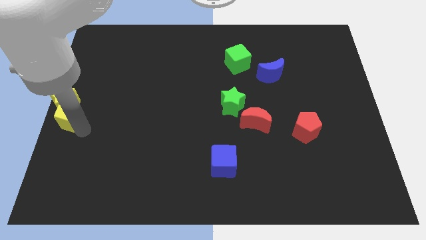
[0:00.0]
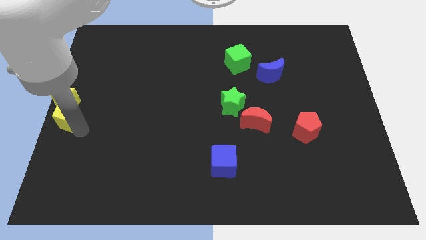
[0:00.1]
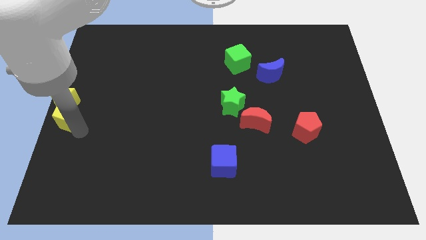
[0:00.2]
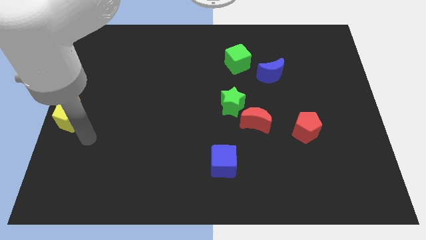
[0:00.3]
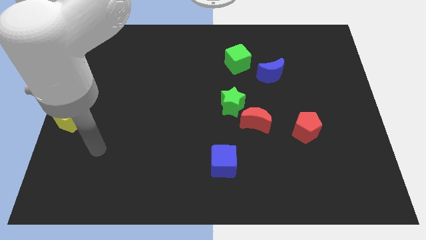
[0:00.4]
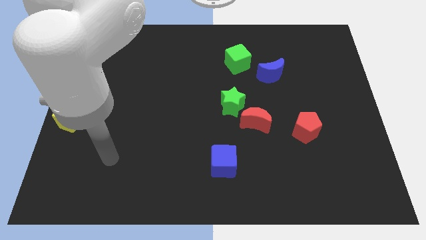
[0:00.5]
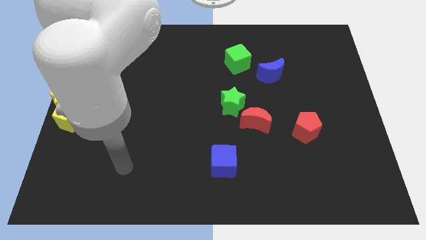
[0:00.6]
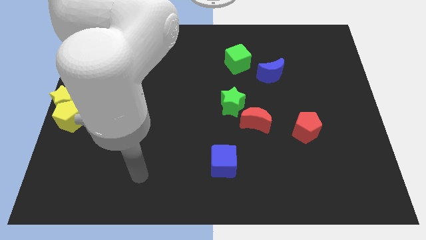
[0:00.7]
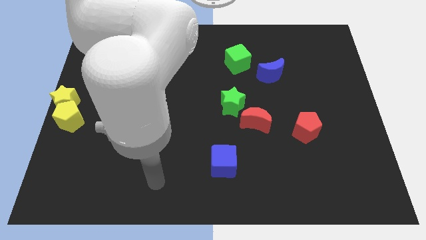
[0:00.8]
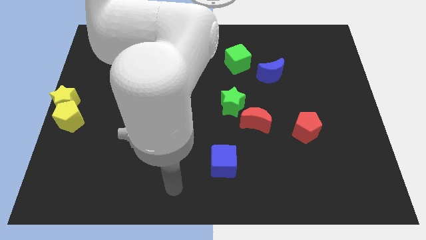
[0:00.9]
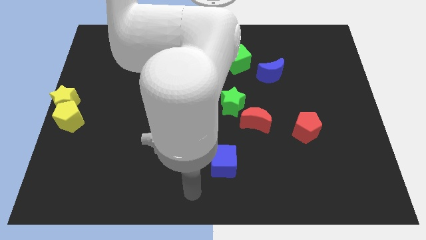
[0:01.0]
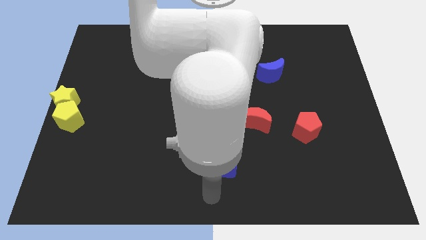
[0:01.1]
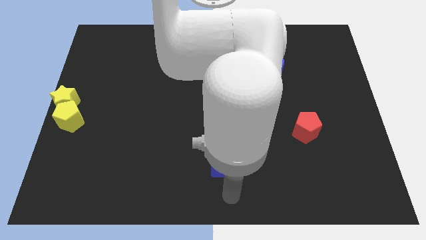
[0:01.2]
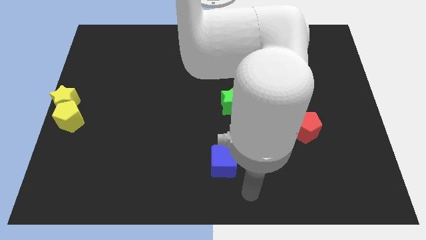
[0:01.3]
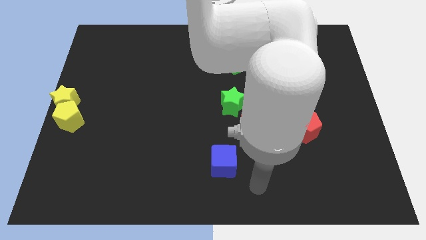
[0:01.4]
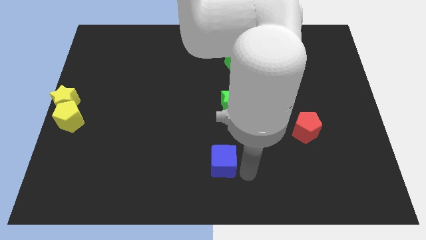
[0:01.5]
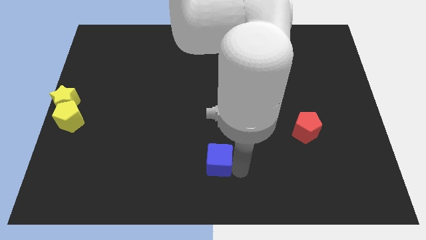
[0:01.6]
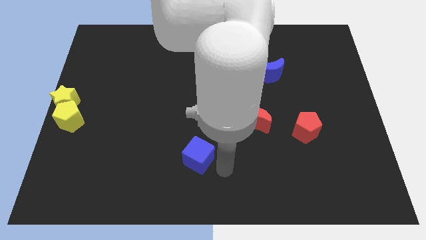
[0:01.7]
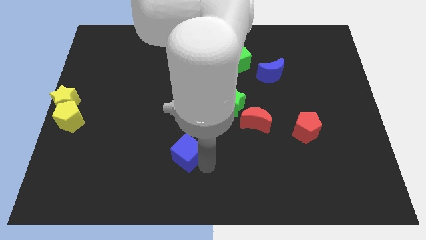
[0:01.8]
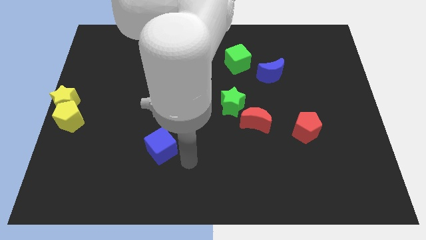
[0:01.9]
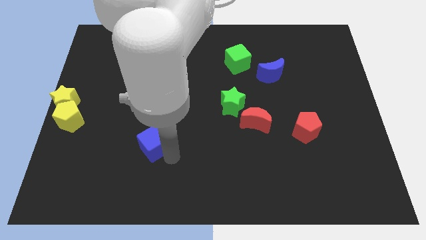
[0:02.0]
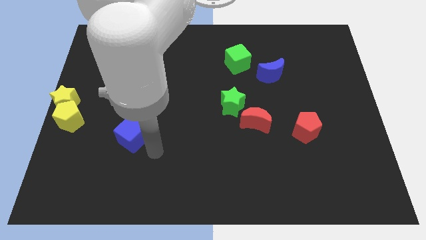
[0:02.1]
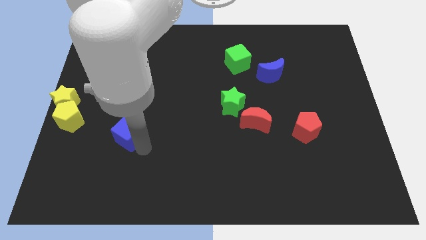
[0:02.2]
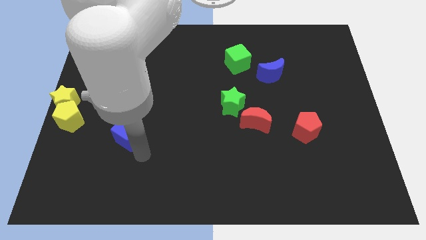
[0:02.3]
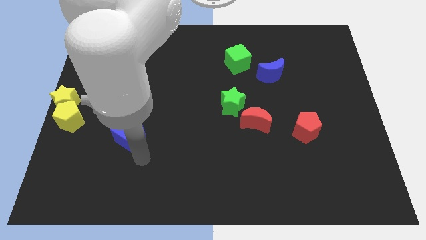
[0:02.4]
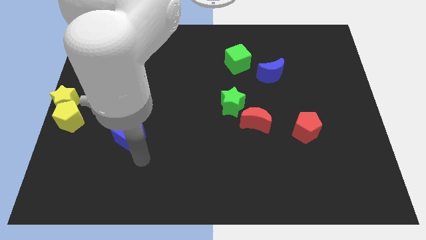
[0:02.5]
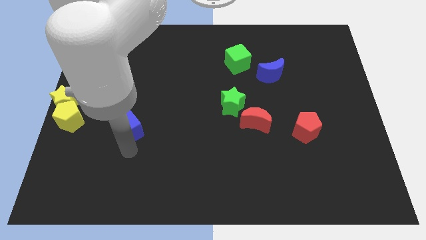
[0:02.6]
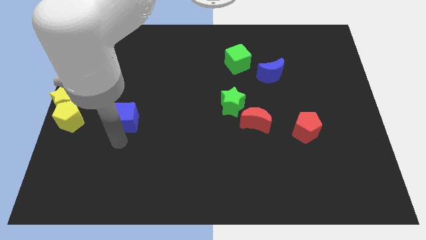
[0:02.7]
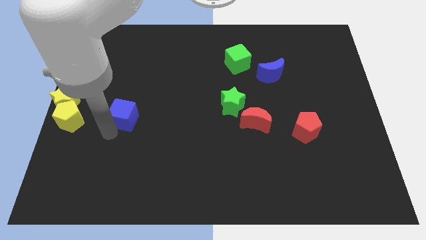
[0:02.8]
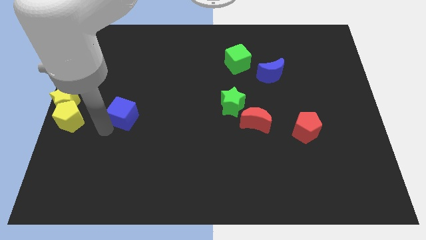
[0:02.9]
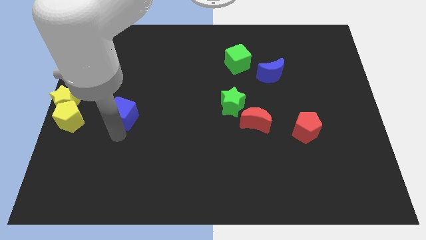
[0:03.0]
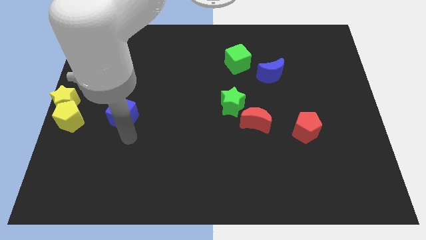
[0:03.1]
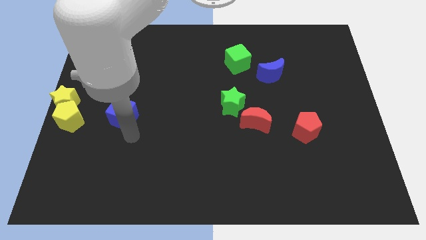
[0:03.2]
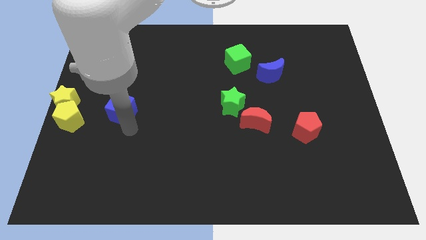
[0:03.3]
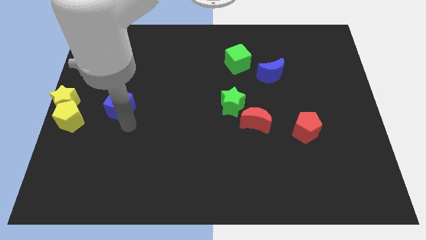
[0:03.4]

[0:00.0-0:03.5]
place the blue cube right to the yellow pentagon

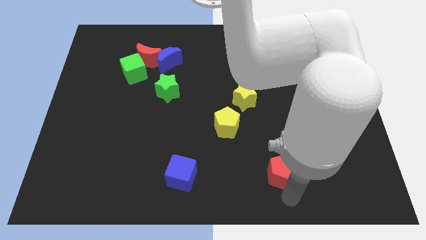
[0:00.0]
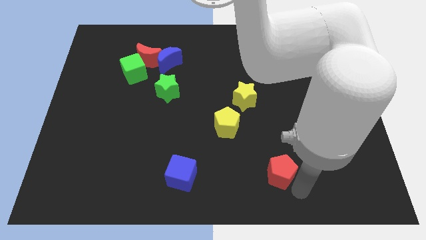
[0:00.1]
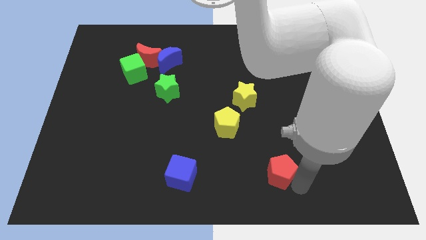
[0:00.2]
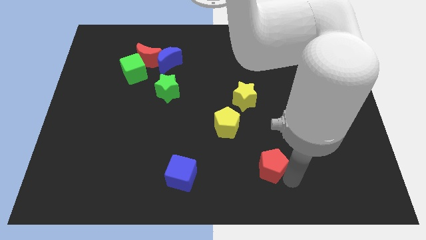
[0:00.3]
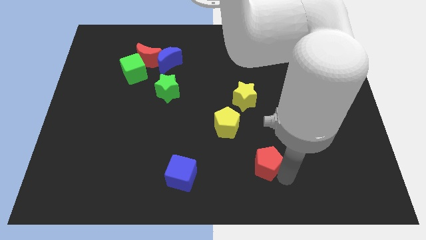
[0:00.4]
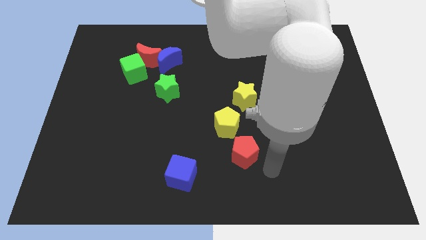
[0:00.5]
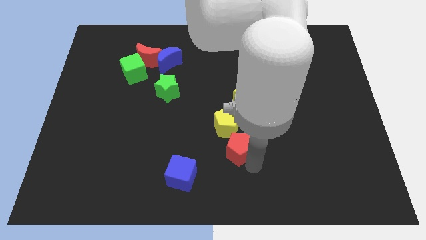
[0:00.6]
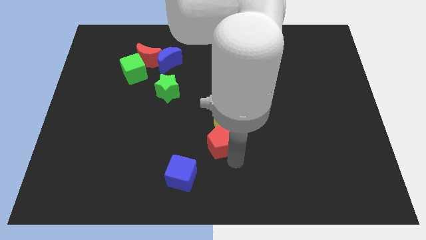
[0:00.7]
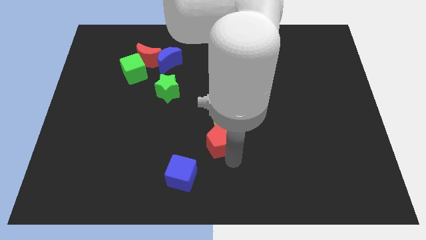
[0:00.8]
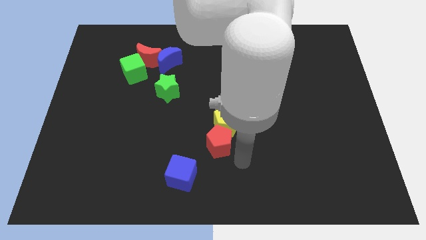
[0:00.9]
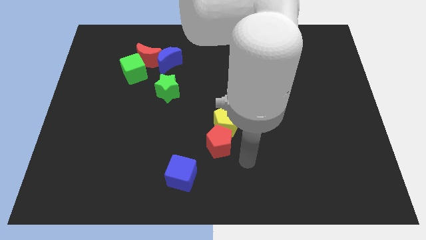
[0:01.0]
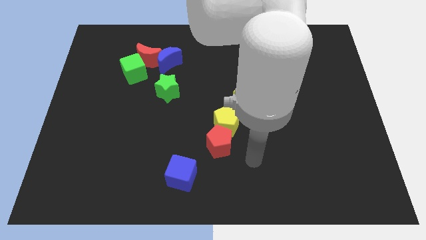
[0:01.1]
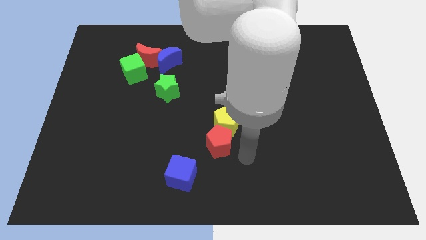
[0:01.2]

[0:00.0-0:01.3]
place red pentagon below the yellow pentagon

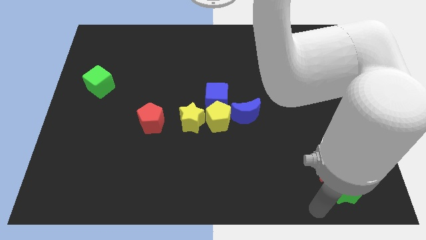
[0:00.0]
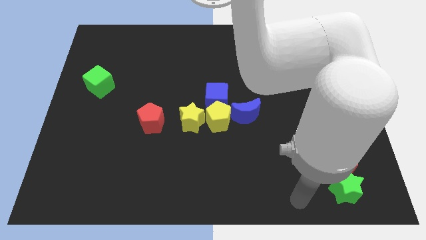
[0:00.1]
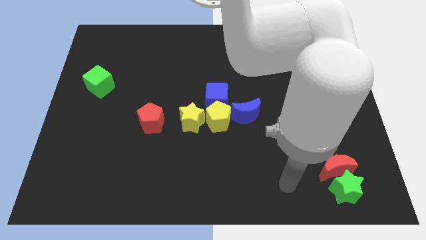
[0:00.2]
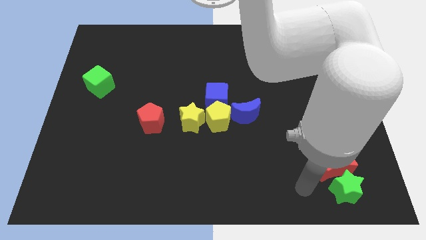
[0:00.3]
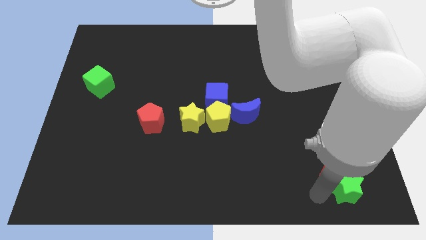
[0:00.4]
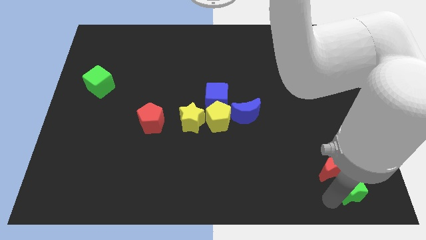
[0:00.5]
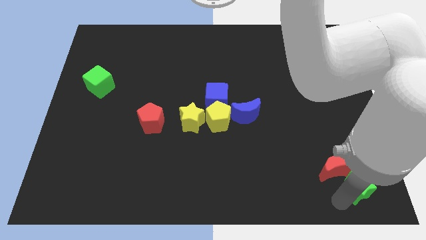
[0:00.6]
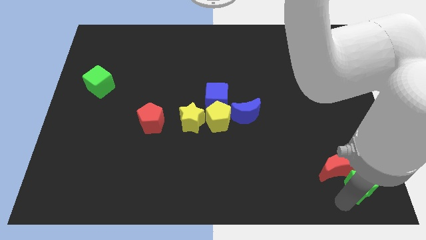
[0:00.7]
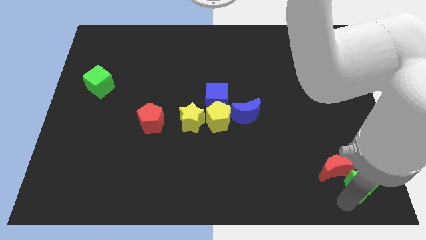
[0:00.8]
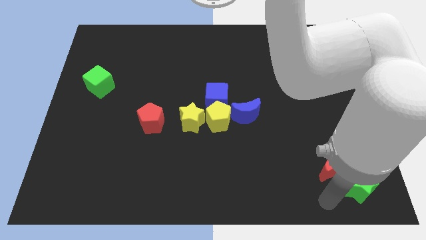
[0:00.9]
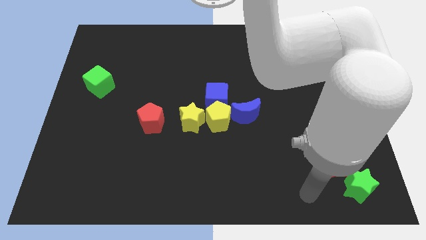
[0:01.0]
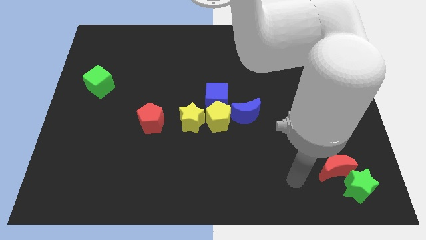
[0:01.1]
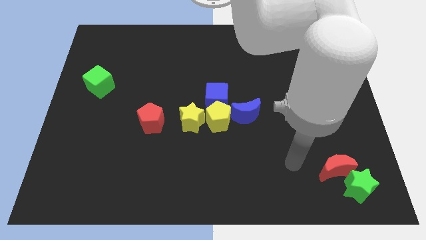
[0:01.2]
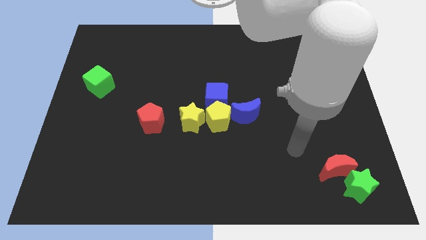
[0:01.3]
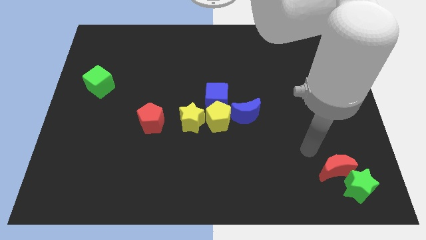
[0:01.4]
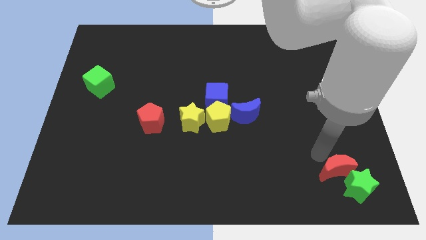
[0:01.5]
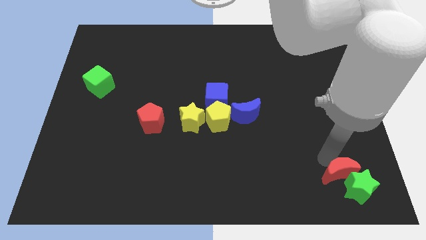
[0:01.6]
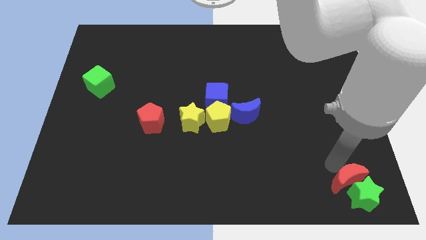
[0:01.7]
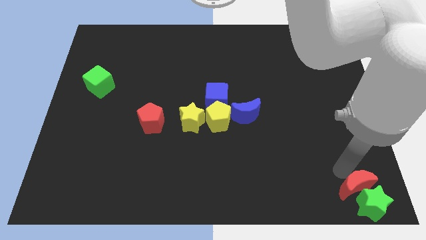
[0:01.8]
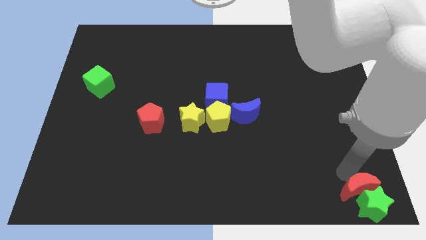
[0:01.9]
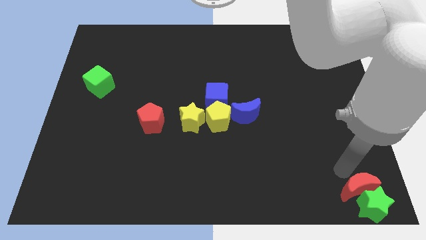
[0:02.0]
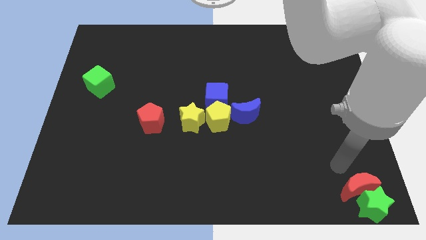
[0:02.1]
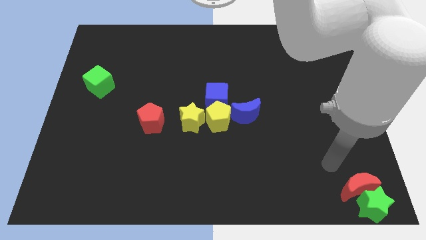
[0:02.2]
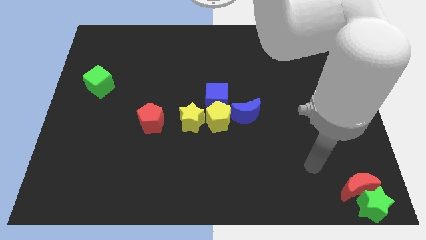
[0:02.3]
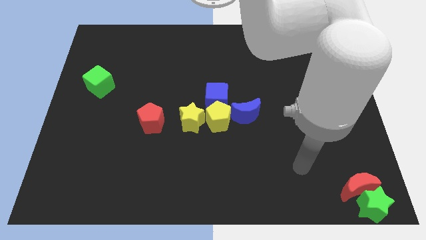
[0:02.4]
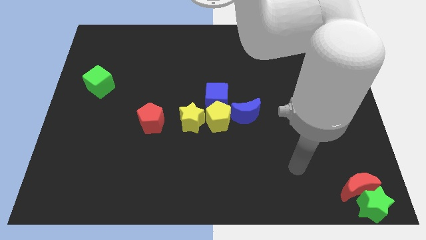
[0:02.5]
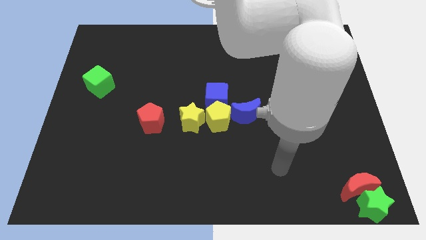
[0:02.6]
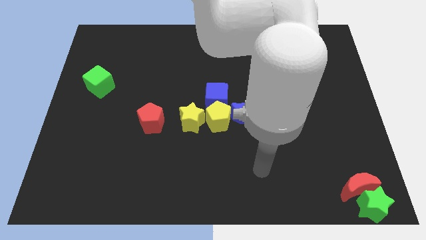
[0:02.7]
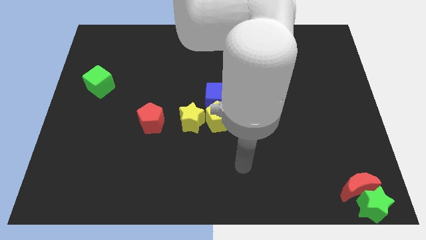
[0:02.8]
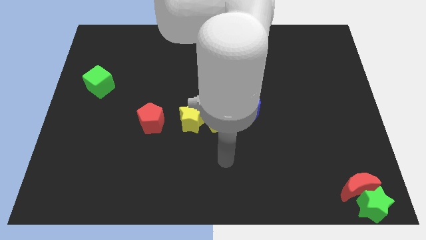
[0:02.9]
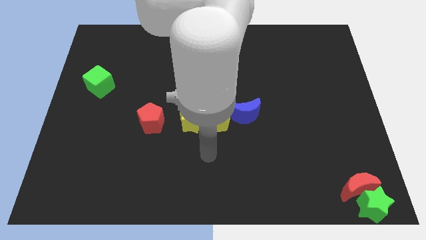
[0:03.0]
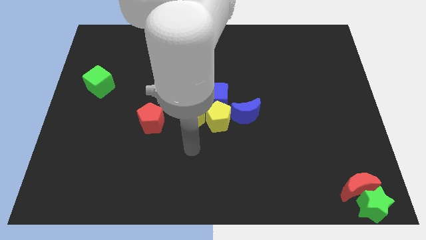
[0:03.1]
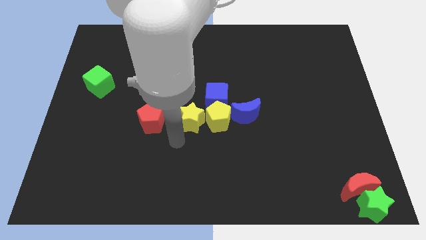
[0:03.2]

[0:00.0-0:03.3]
move the red crescent and green star to the bottom right

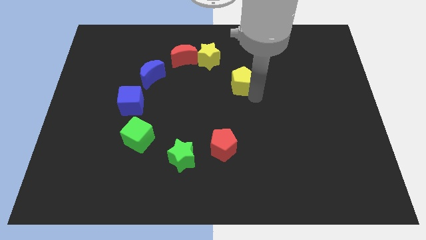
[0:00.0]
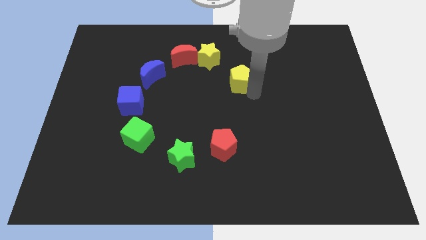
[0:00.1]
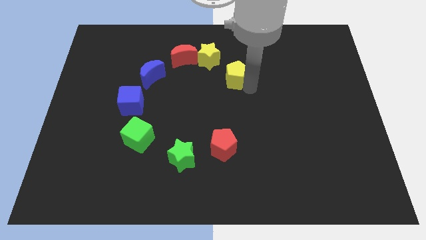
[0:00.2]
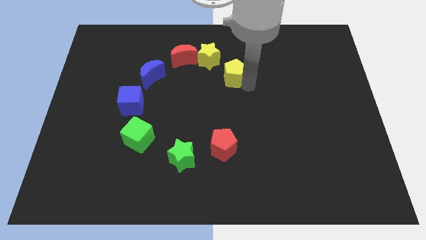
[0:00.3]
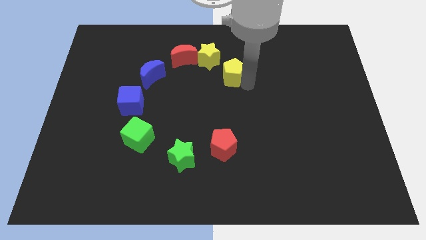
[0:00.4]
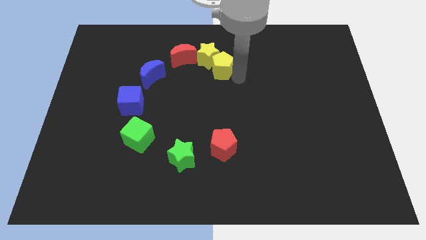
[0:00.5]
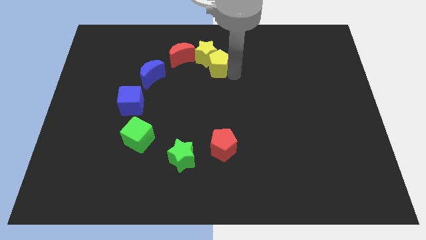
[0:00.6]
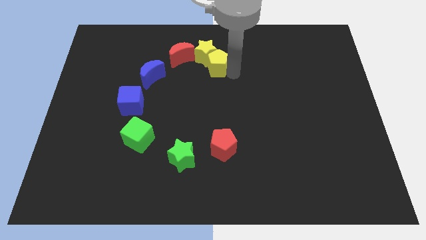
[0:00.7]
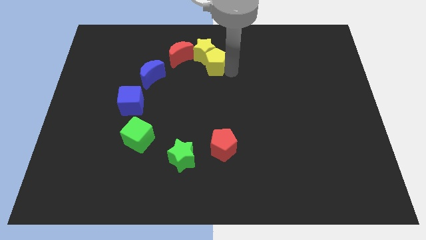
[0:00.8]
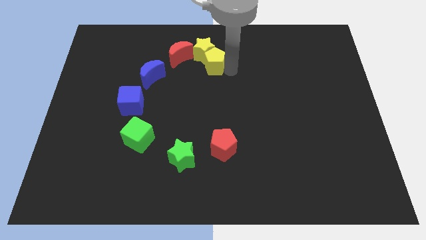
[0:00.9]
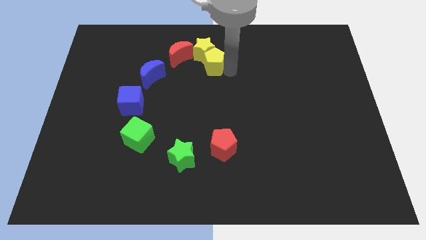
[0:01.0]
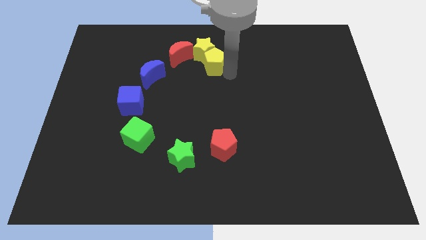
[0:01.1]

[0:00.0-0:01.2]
push the yellow pentagon into the yellow star
